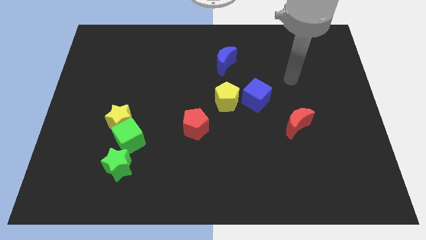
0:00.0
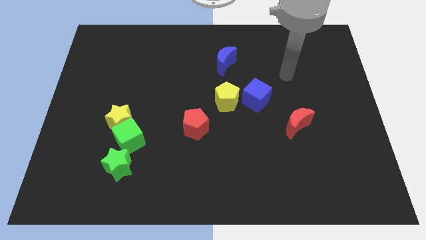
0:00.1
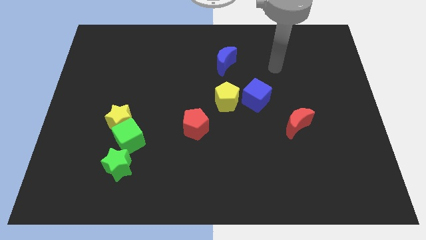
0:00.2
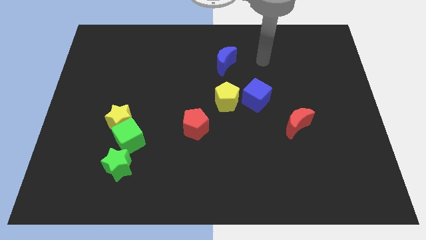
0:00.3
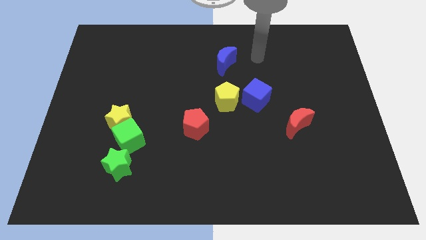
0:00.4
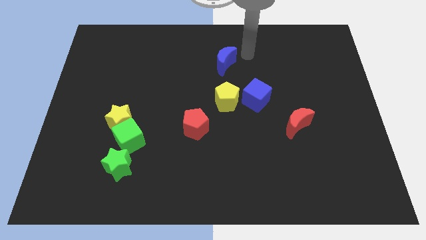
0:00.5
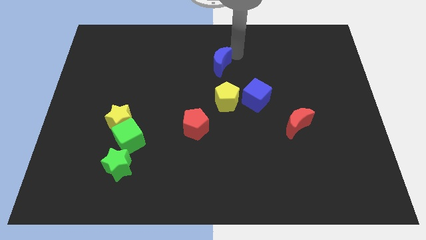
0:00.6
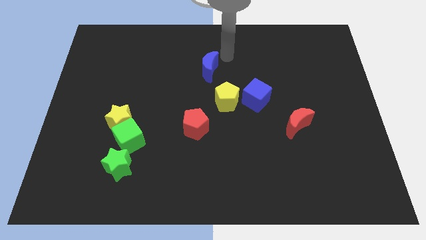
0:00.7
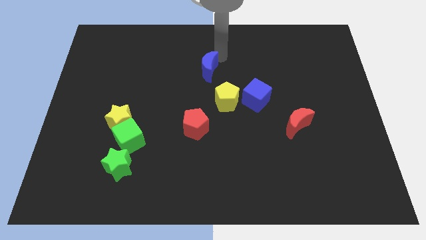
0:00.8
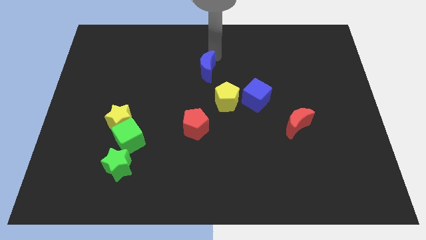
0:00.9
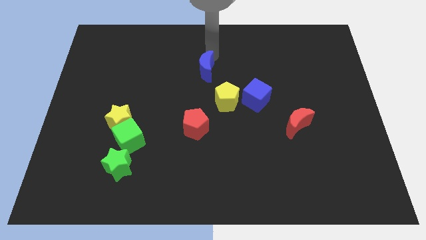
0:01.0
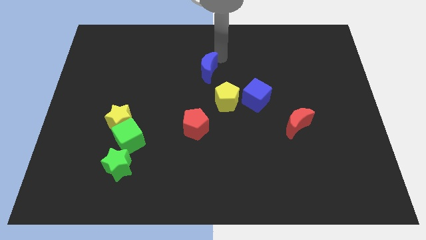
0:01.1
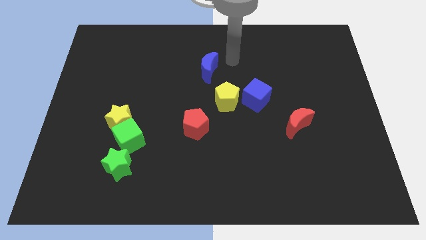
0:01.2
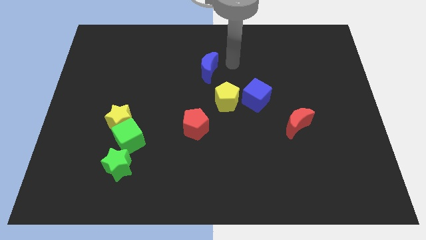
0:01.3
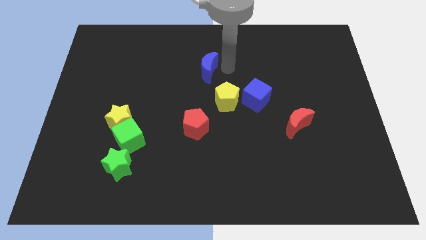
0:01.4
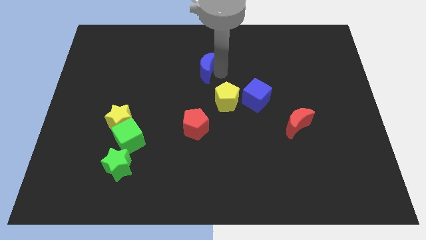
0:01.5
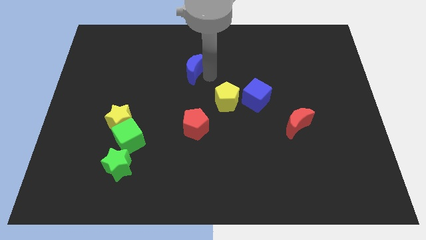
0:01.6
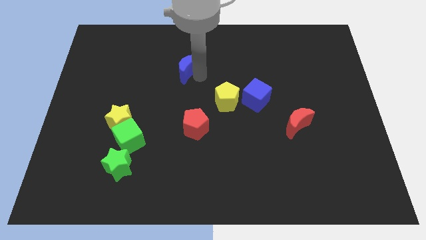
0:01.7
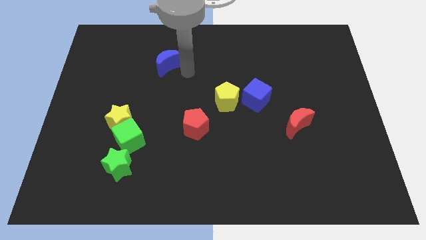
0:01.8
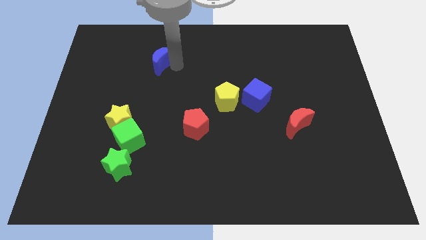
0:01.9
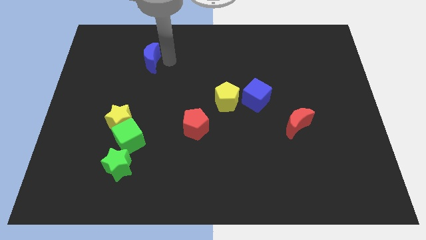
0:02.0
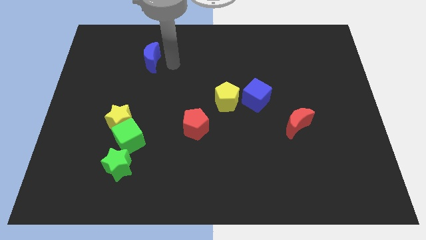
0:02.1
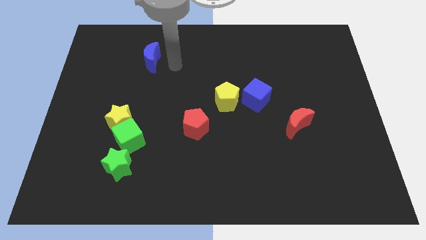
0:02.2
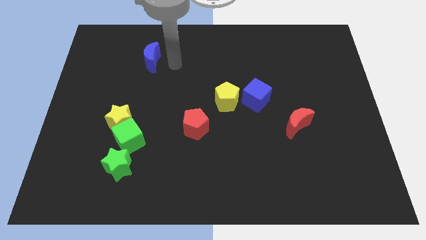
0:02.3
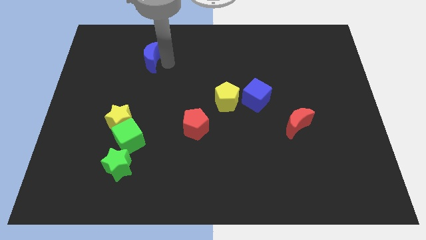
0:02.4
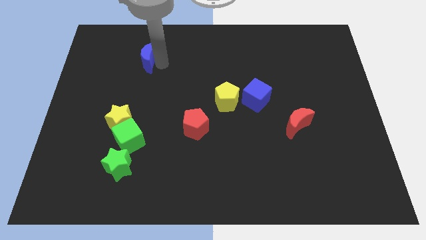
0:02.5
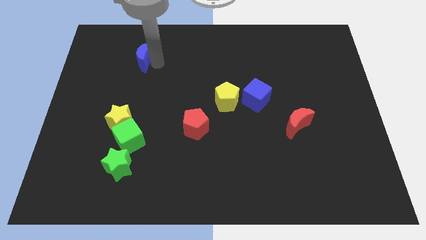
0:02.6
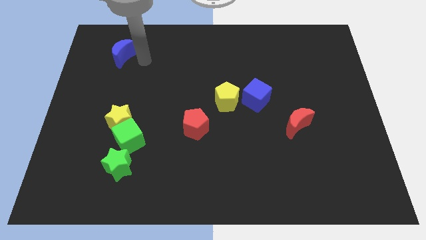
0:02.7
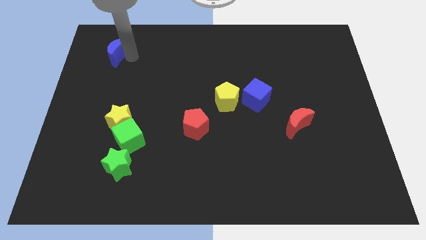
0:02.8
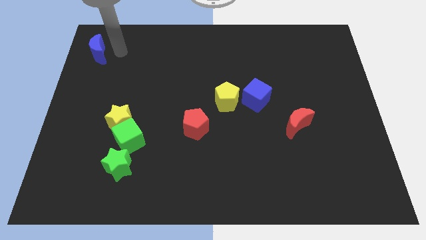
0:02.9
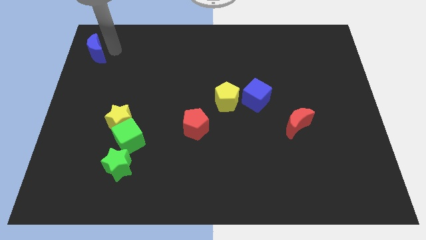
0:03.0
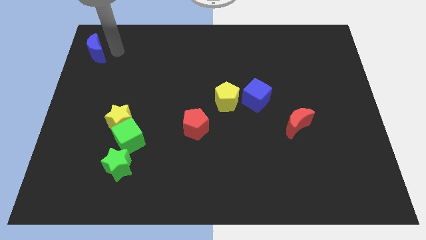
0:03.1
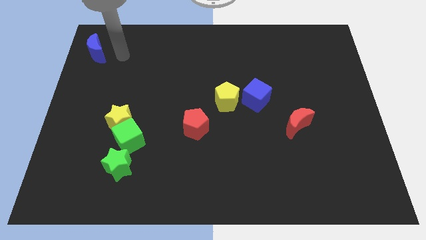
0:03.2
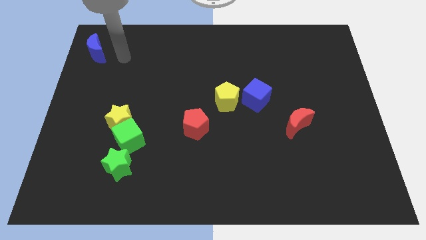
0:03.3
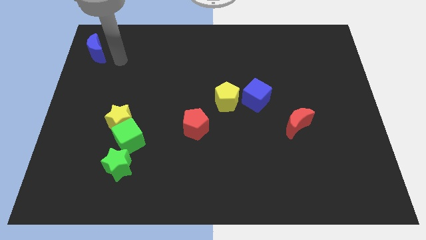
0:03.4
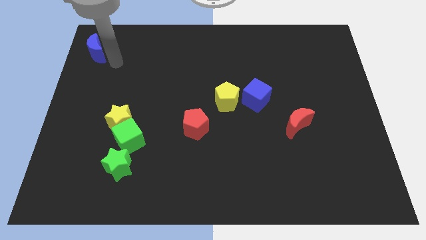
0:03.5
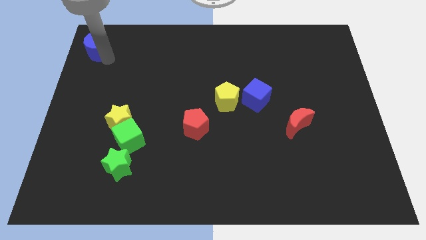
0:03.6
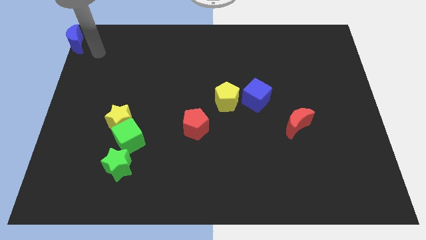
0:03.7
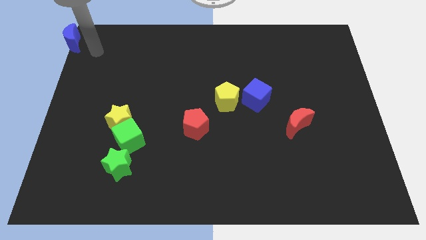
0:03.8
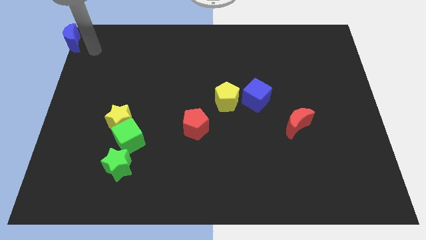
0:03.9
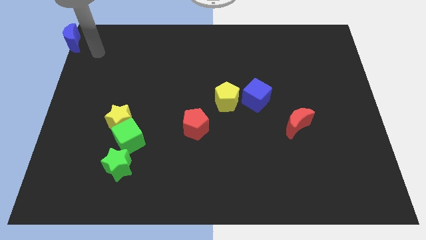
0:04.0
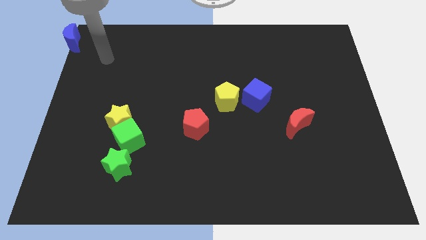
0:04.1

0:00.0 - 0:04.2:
place the blue moon at the top left corner of the board

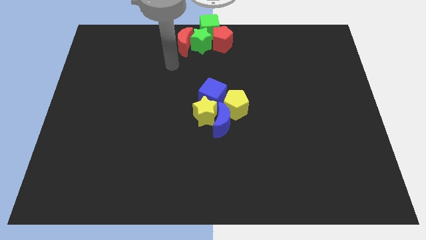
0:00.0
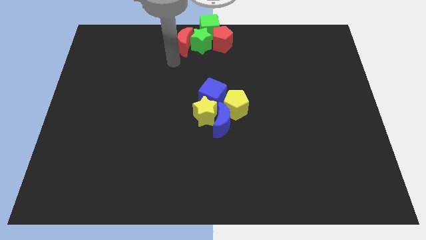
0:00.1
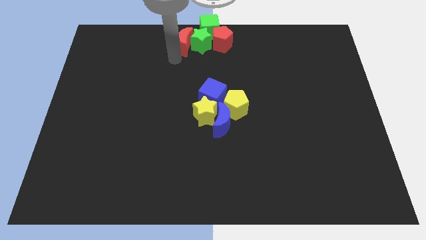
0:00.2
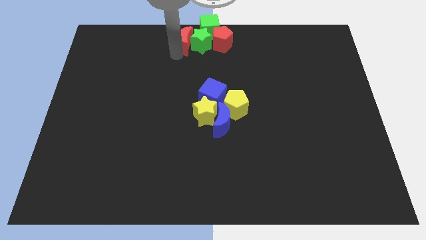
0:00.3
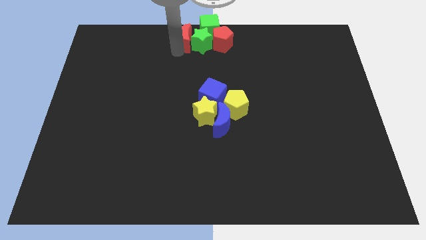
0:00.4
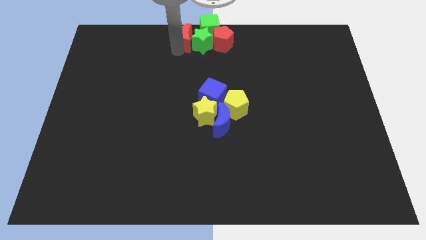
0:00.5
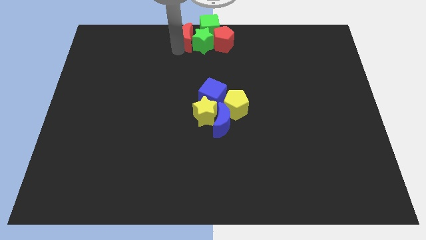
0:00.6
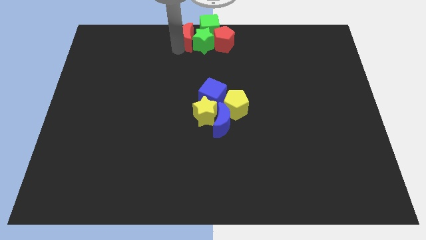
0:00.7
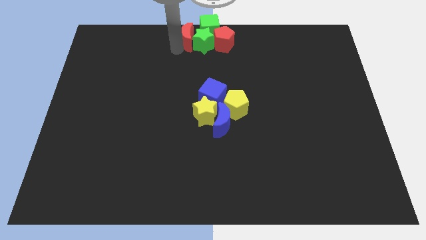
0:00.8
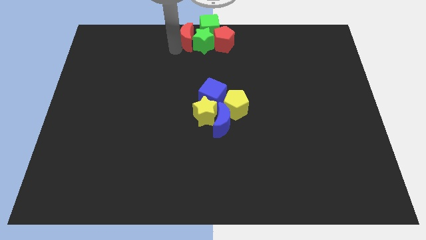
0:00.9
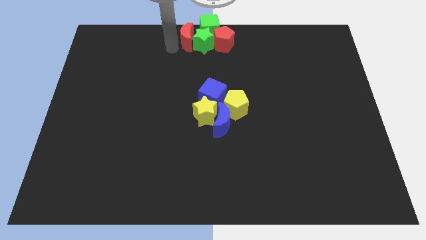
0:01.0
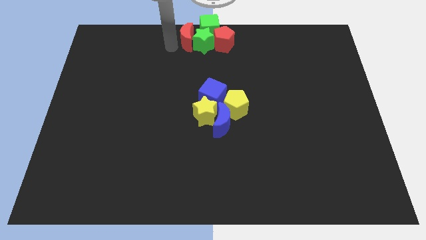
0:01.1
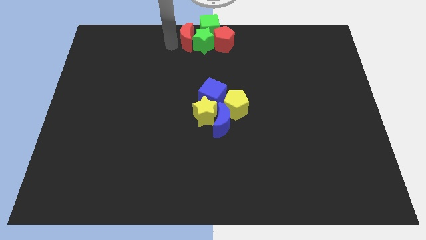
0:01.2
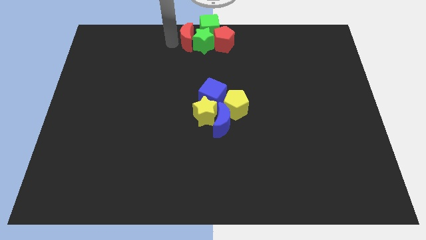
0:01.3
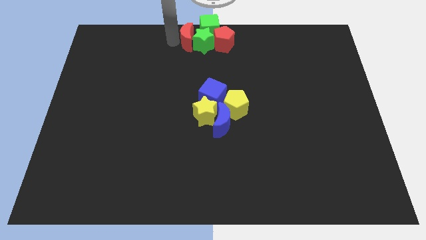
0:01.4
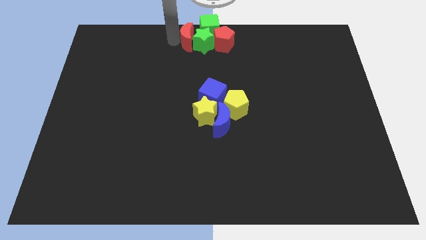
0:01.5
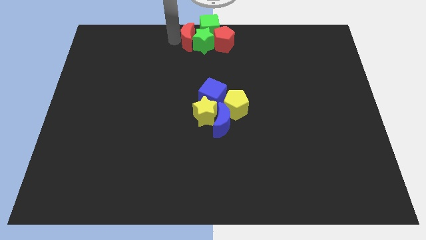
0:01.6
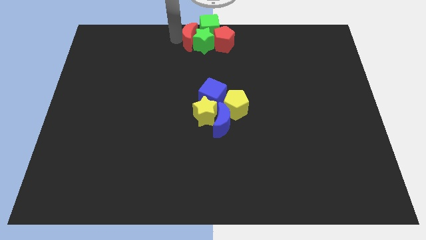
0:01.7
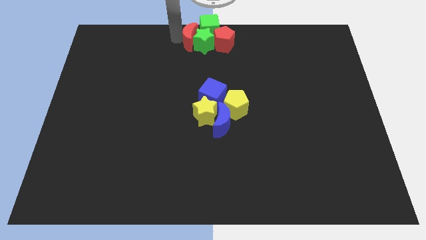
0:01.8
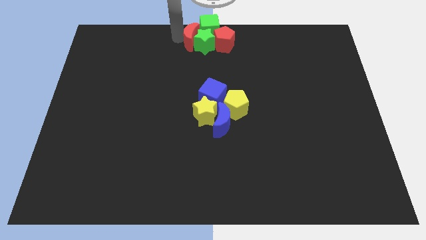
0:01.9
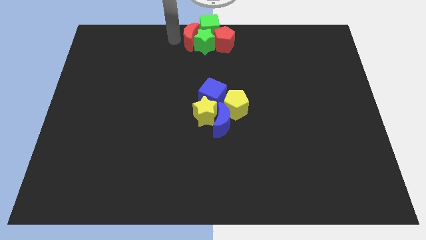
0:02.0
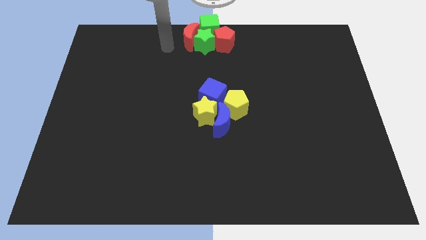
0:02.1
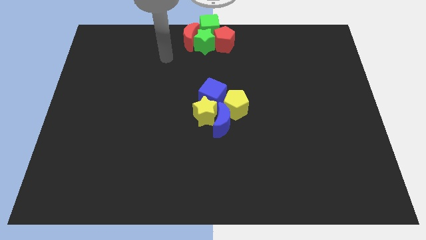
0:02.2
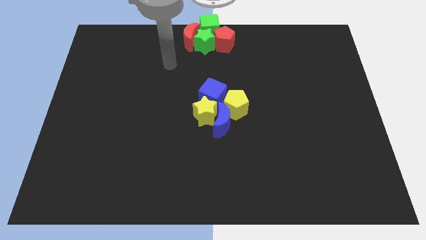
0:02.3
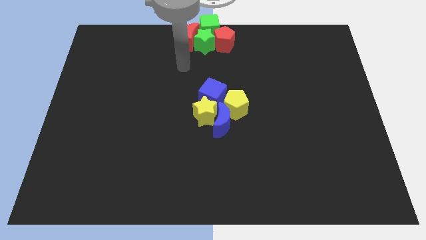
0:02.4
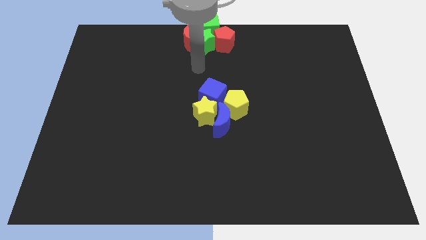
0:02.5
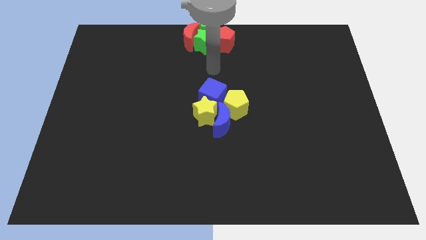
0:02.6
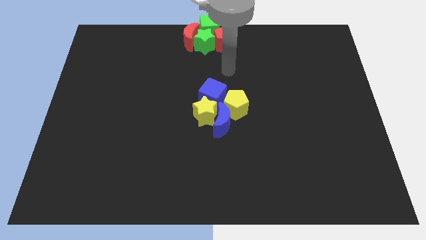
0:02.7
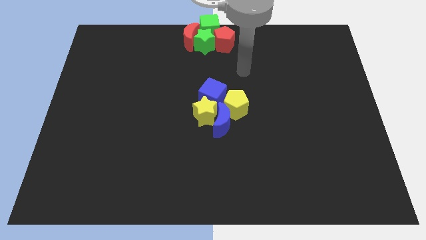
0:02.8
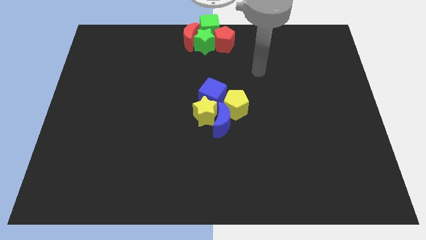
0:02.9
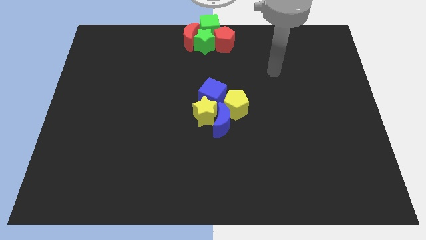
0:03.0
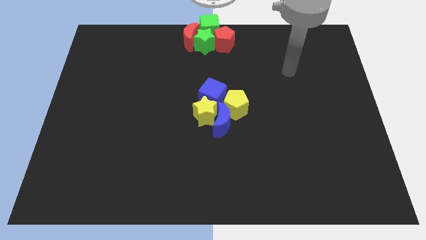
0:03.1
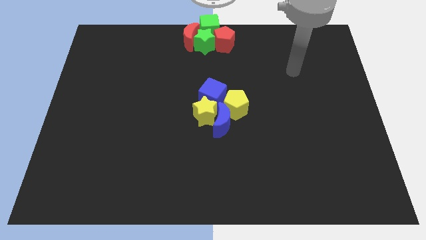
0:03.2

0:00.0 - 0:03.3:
move yourself away from the red moon

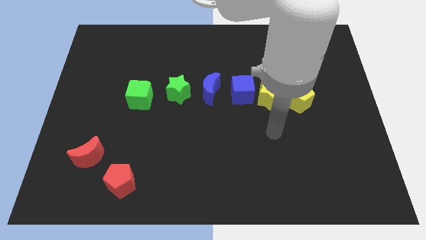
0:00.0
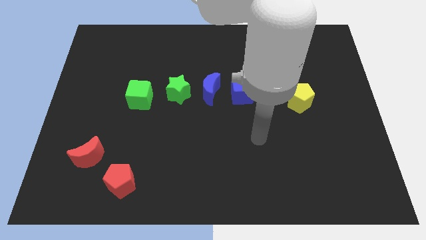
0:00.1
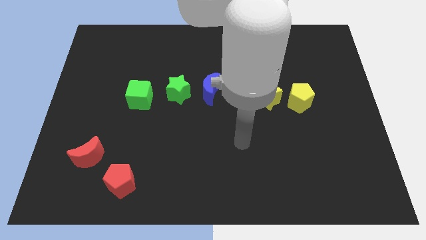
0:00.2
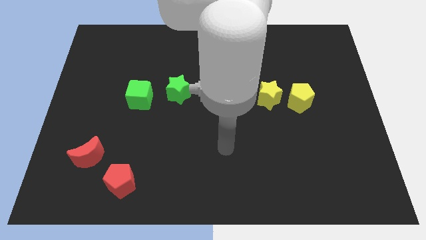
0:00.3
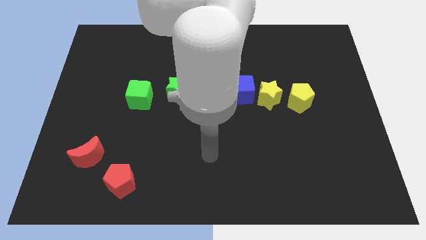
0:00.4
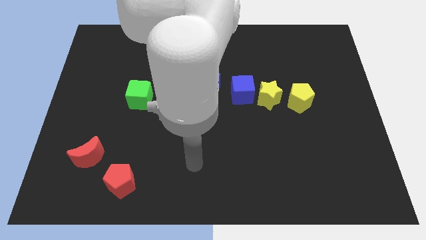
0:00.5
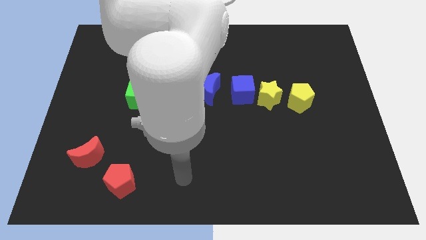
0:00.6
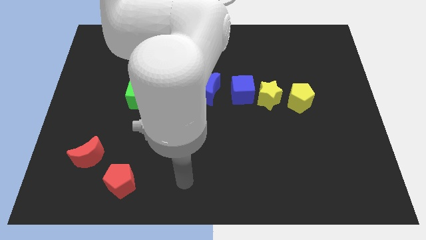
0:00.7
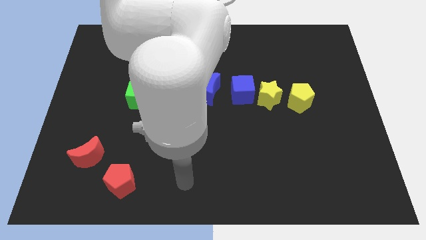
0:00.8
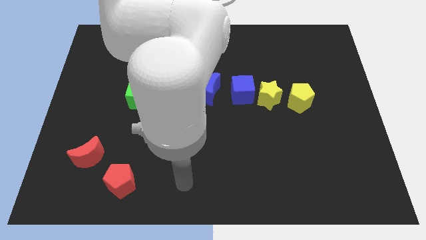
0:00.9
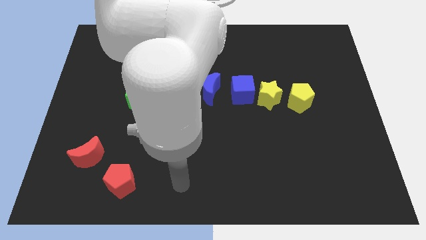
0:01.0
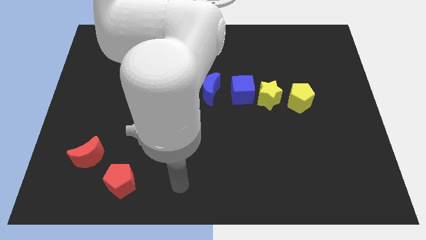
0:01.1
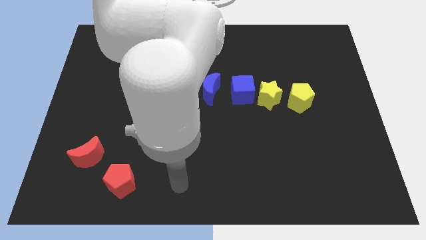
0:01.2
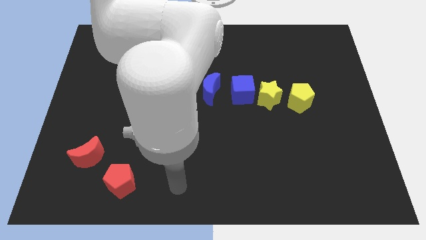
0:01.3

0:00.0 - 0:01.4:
point the arm to the right of the red pentagon
